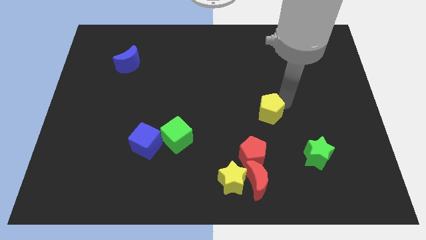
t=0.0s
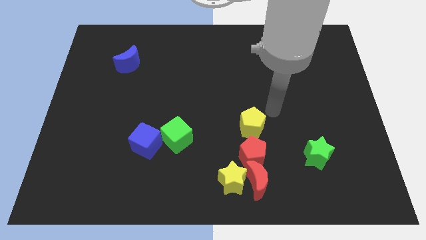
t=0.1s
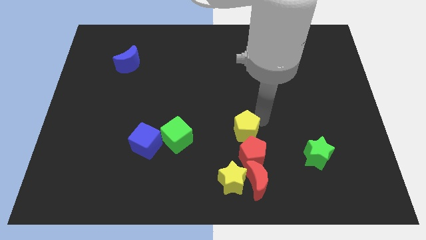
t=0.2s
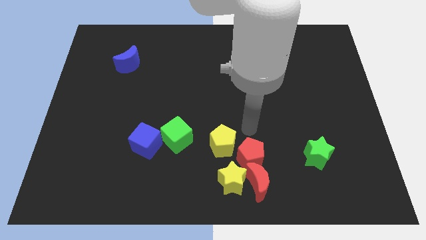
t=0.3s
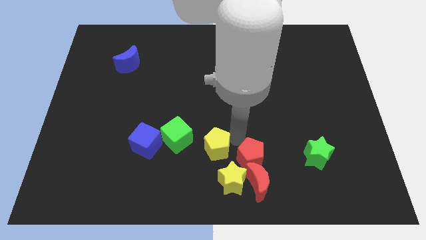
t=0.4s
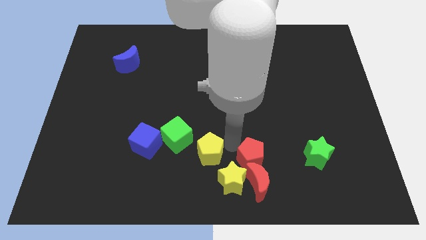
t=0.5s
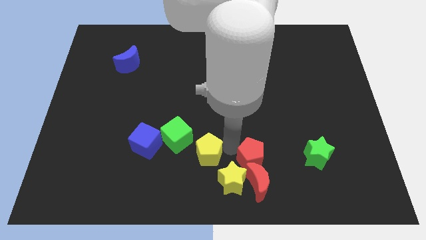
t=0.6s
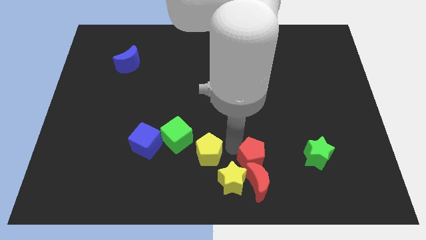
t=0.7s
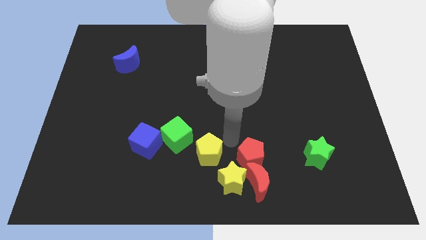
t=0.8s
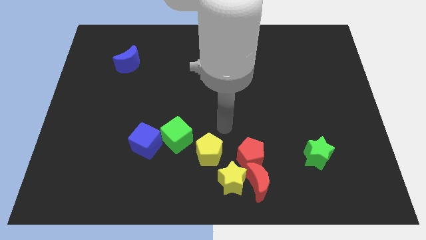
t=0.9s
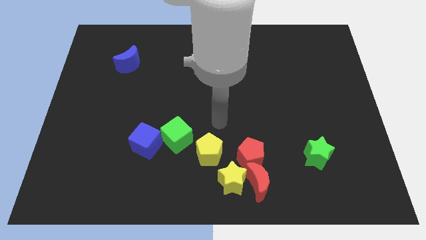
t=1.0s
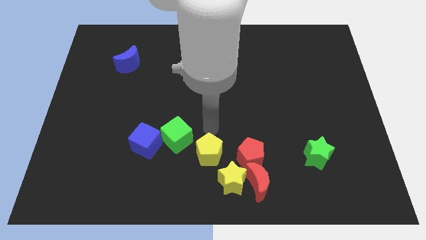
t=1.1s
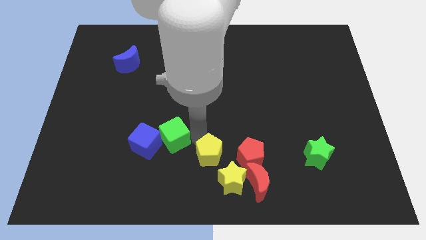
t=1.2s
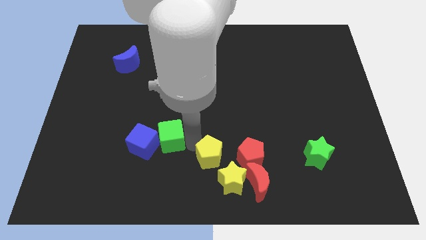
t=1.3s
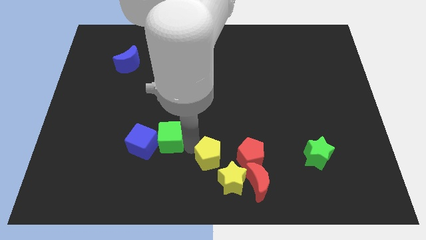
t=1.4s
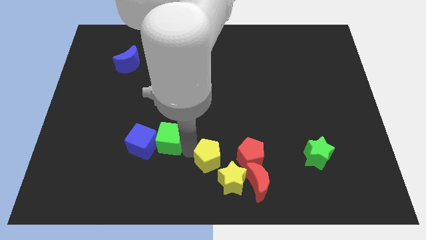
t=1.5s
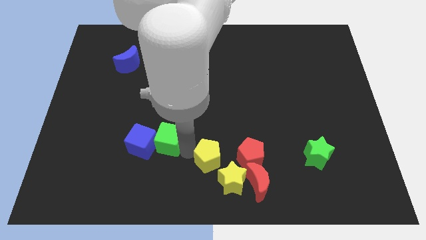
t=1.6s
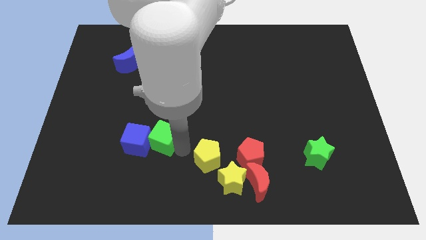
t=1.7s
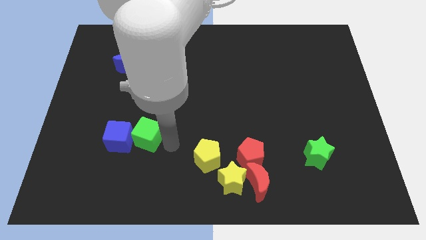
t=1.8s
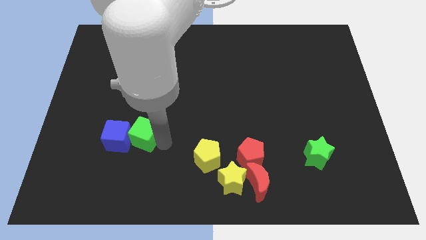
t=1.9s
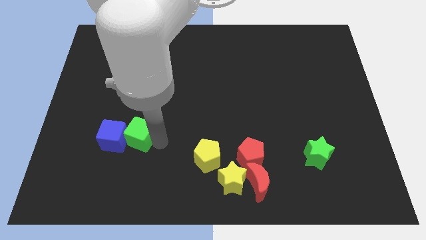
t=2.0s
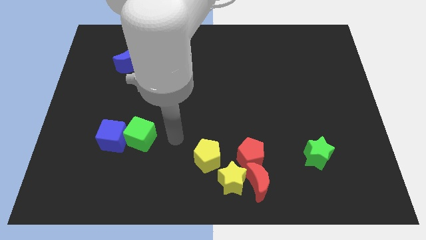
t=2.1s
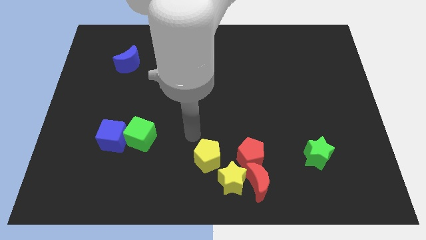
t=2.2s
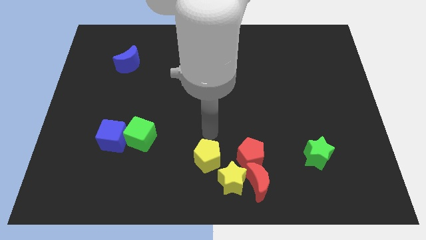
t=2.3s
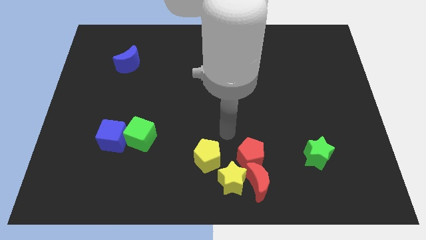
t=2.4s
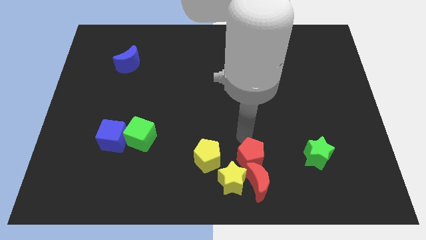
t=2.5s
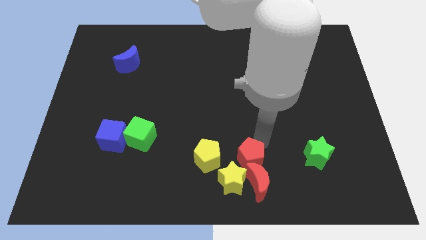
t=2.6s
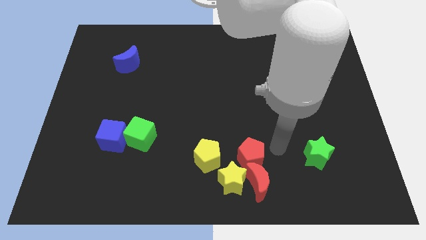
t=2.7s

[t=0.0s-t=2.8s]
push green cube and blue cube towards left of the board

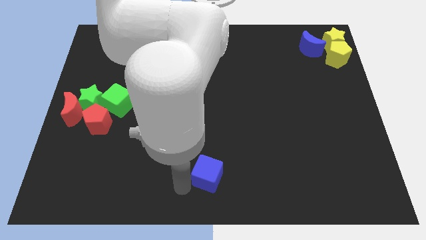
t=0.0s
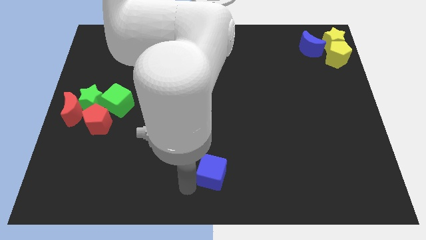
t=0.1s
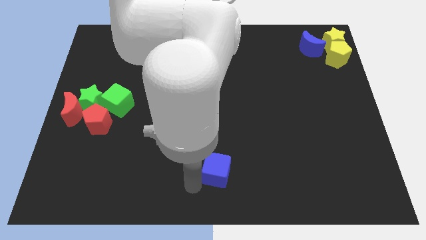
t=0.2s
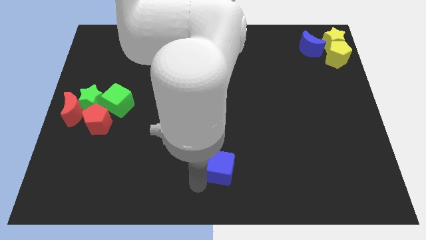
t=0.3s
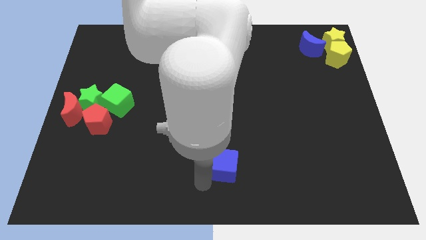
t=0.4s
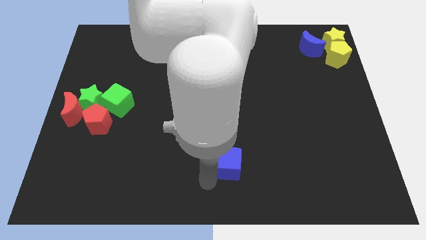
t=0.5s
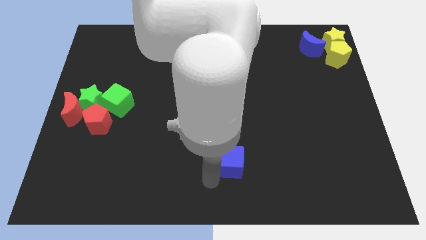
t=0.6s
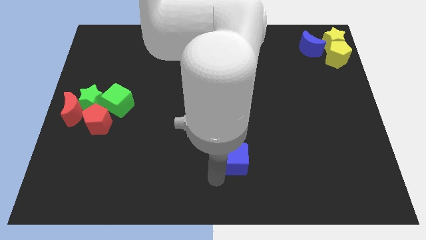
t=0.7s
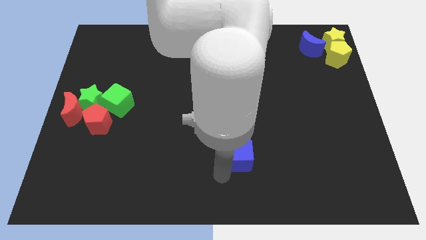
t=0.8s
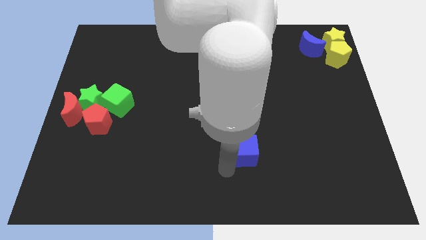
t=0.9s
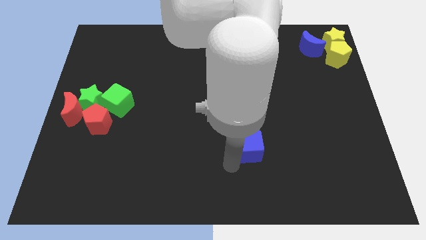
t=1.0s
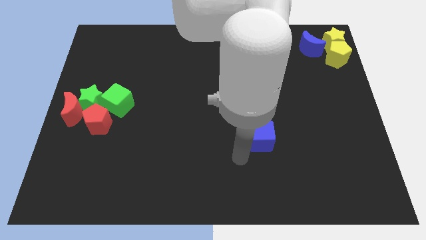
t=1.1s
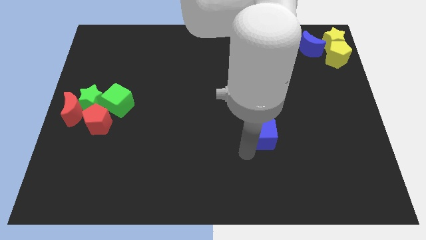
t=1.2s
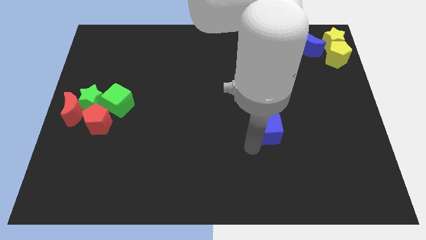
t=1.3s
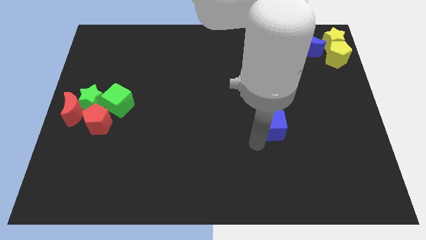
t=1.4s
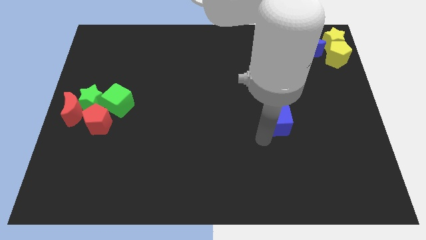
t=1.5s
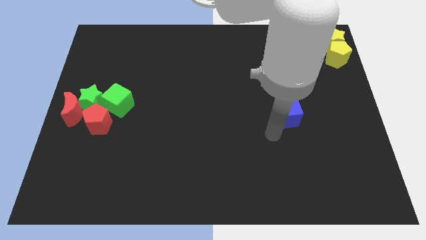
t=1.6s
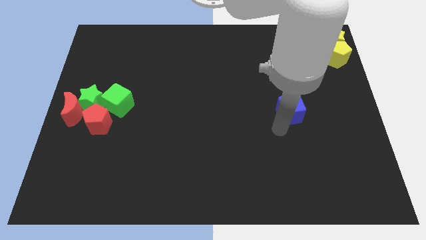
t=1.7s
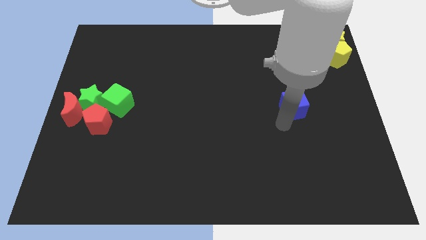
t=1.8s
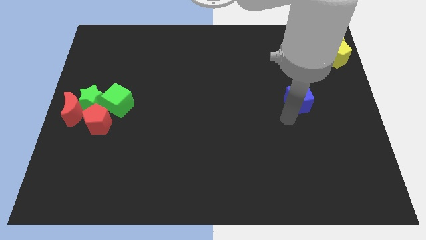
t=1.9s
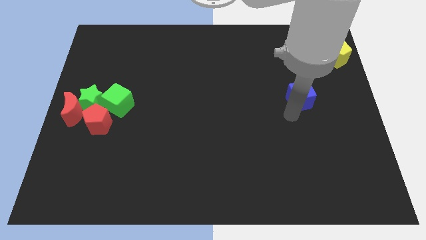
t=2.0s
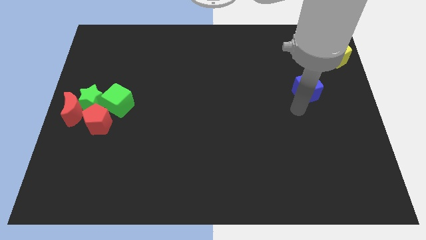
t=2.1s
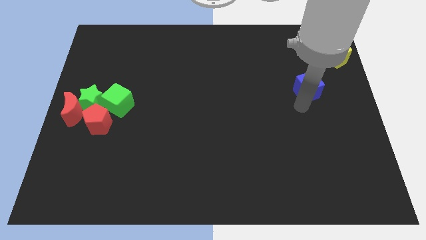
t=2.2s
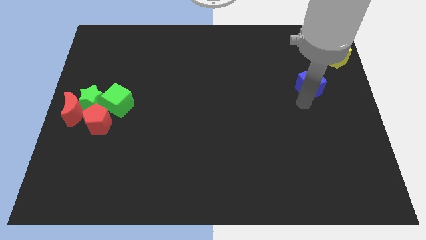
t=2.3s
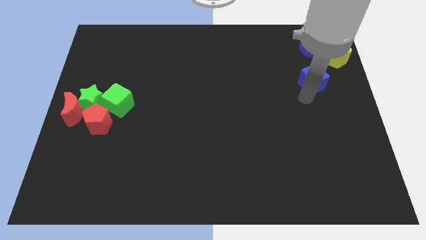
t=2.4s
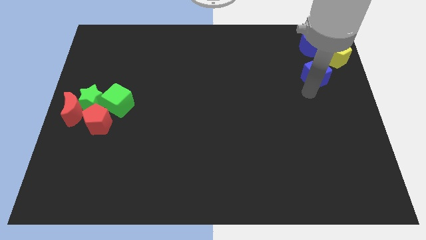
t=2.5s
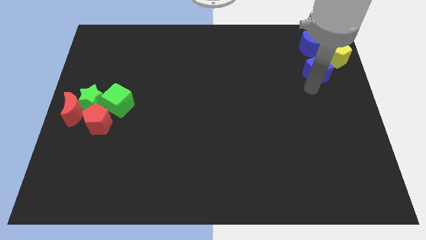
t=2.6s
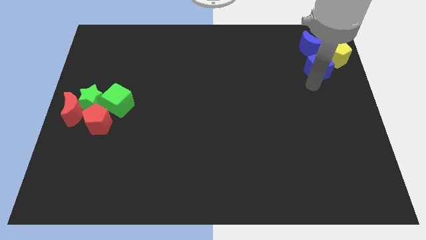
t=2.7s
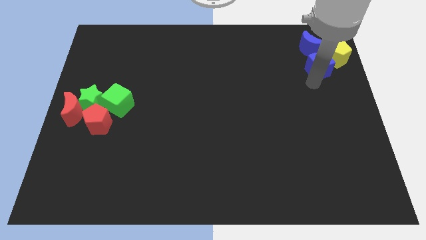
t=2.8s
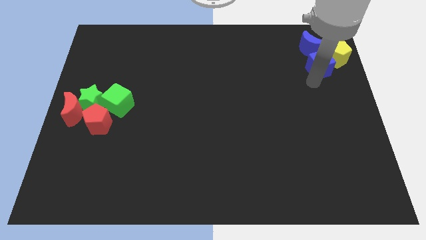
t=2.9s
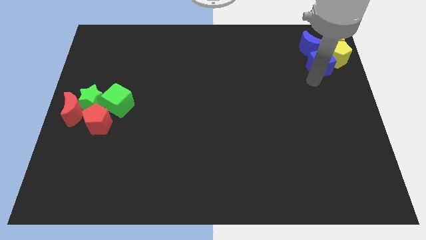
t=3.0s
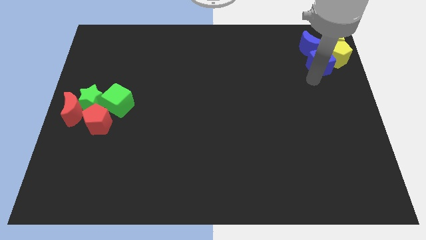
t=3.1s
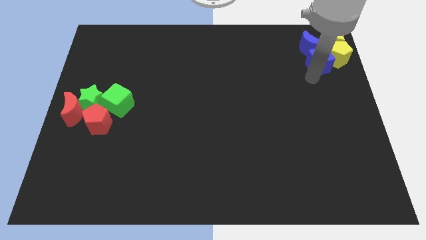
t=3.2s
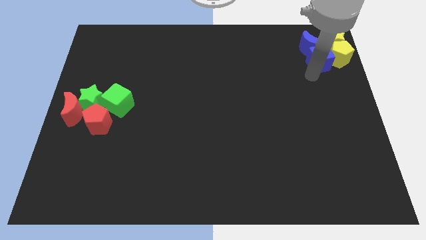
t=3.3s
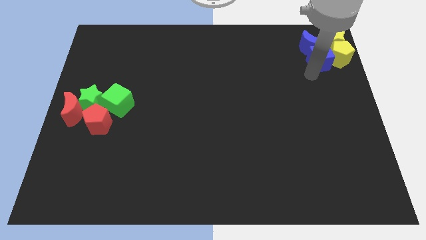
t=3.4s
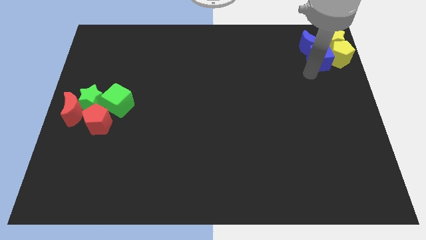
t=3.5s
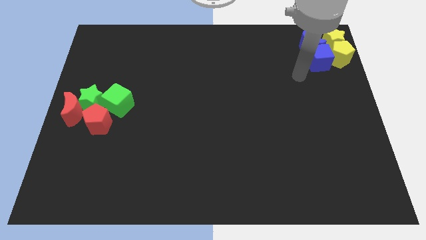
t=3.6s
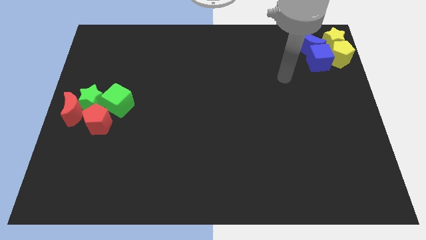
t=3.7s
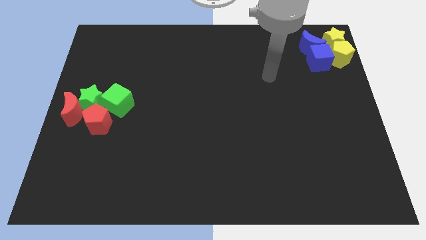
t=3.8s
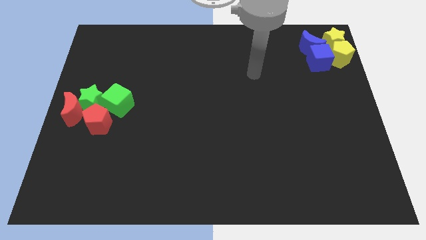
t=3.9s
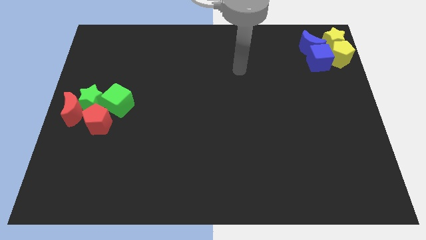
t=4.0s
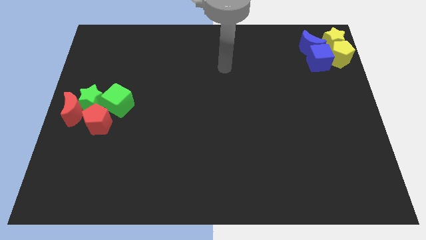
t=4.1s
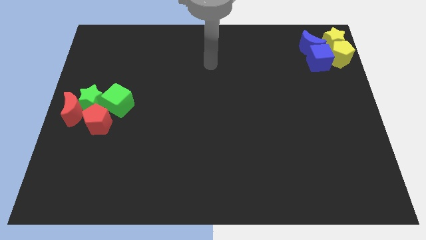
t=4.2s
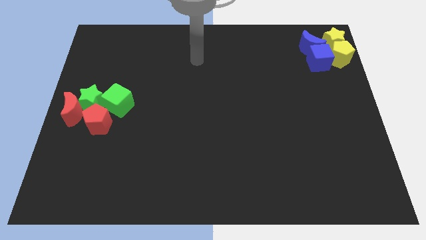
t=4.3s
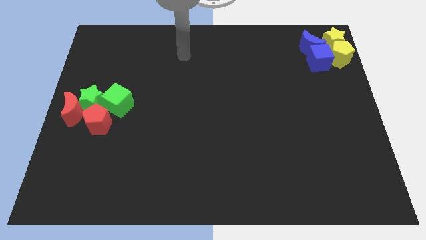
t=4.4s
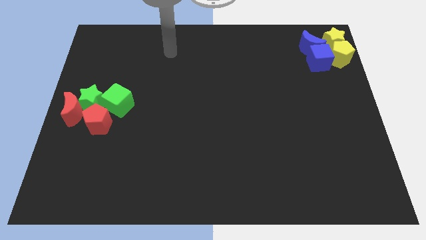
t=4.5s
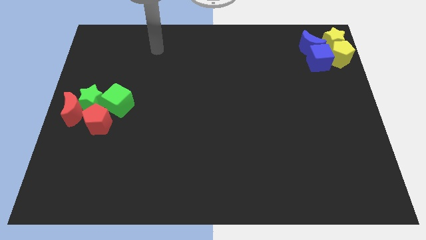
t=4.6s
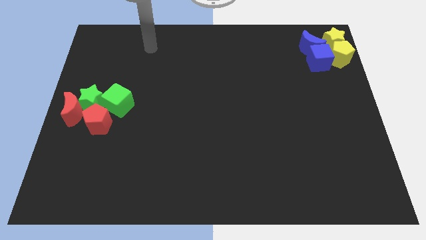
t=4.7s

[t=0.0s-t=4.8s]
push the blue cube into the group of yellow blocks

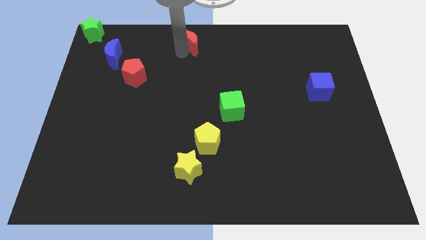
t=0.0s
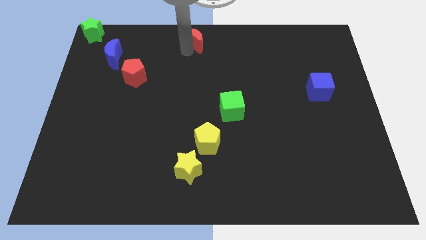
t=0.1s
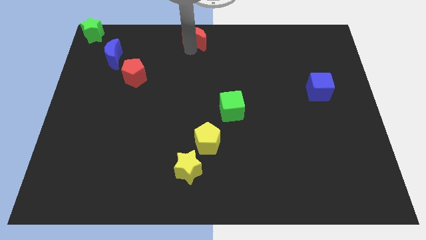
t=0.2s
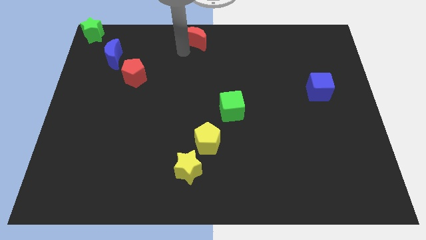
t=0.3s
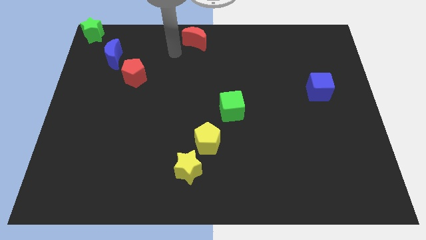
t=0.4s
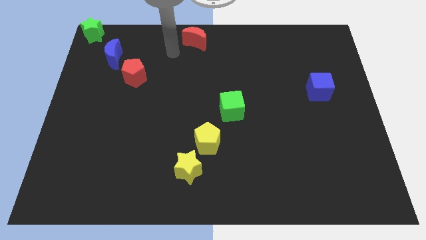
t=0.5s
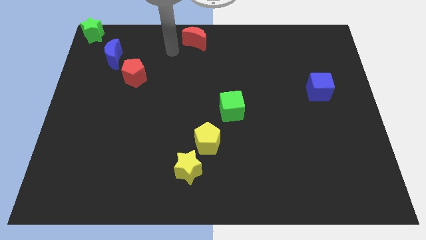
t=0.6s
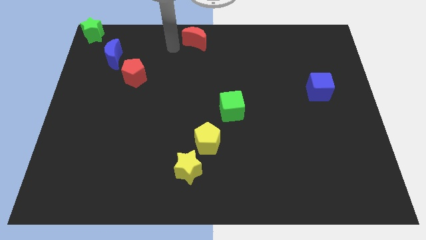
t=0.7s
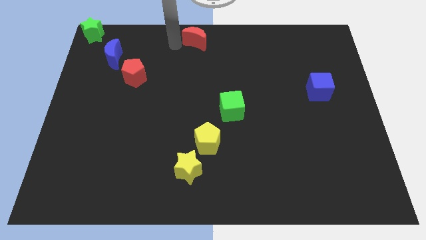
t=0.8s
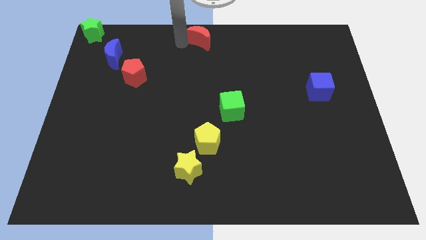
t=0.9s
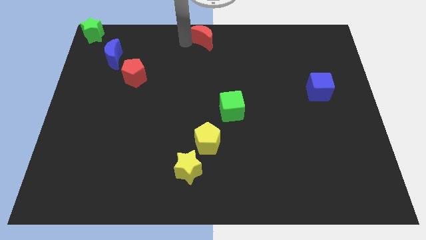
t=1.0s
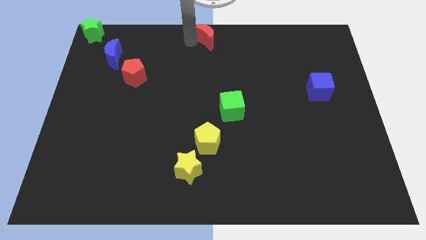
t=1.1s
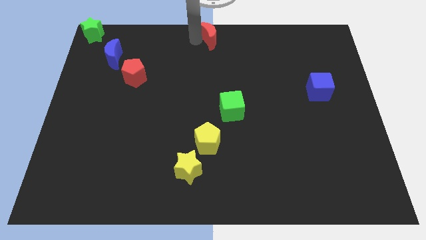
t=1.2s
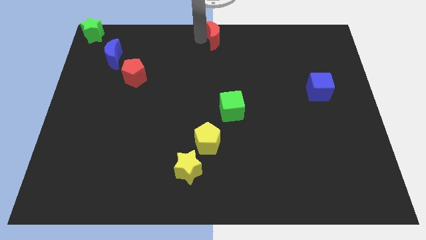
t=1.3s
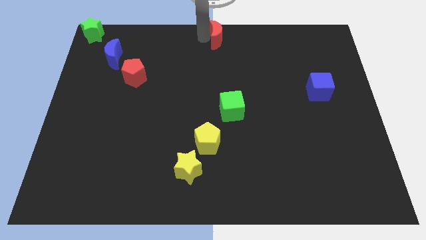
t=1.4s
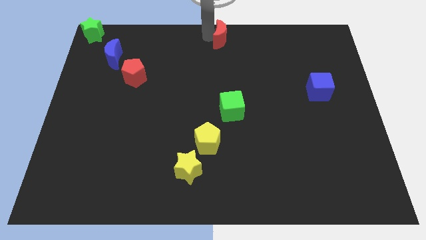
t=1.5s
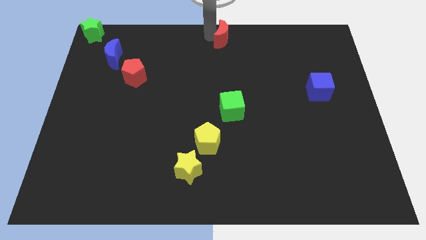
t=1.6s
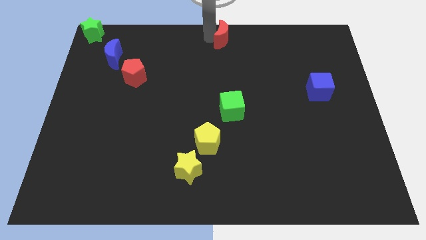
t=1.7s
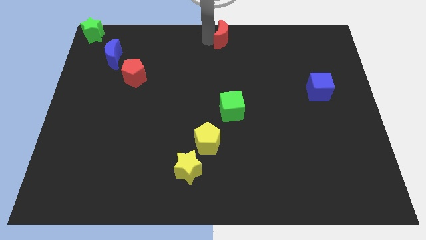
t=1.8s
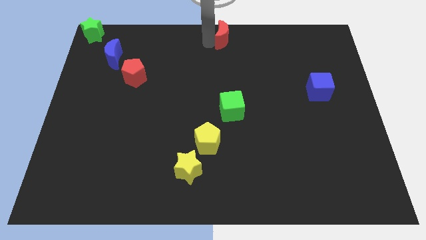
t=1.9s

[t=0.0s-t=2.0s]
move the red crescent to the top center
